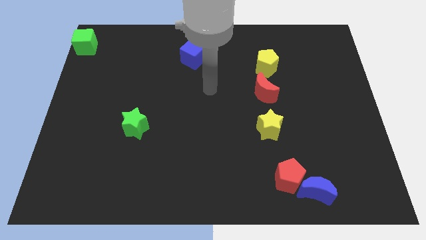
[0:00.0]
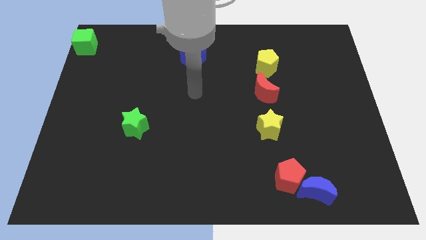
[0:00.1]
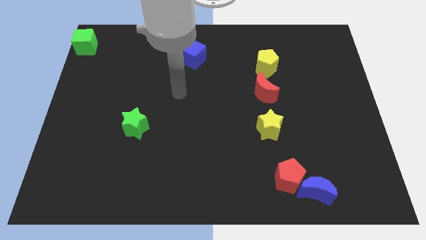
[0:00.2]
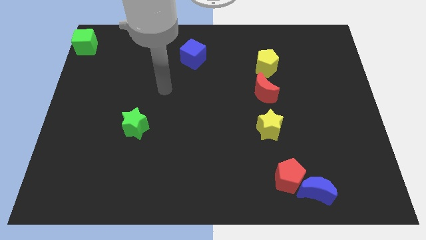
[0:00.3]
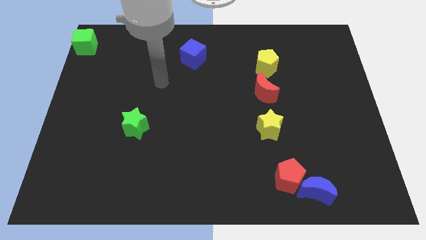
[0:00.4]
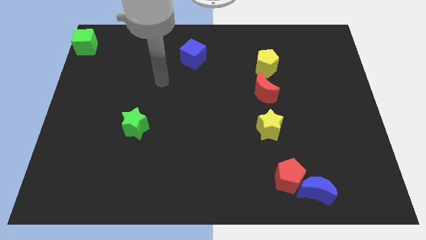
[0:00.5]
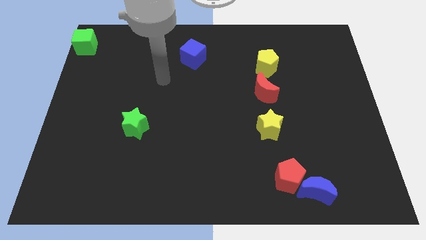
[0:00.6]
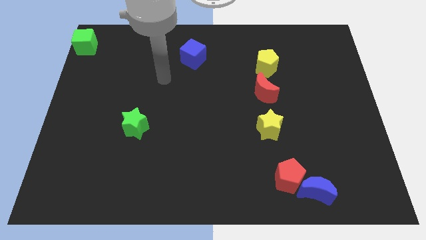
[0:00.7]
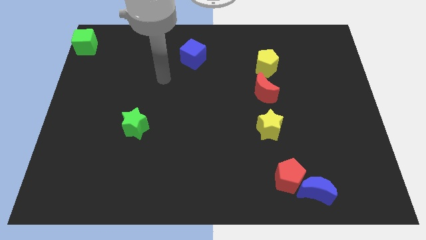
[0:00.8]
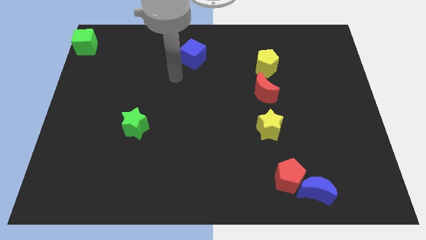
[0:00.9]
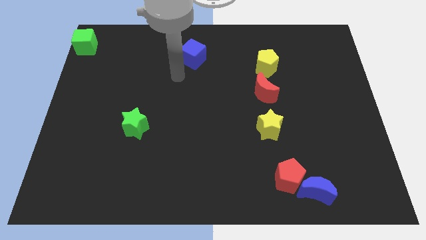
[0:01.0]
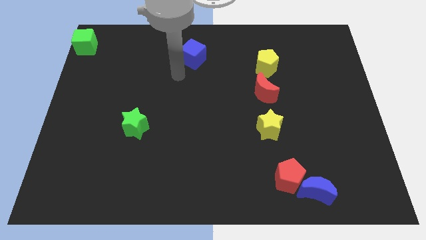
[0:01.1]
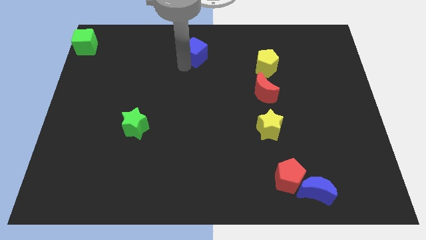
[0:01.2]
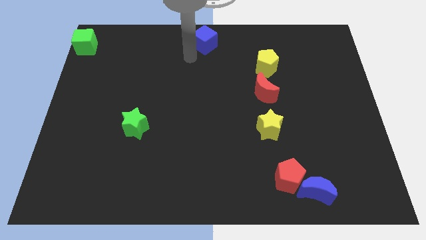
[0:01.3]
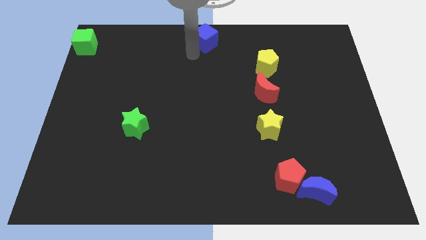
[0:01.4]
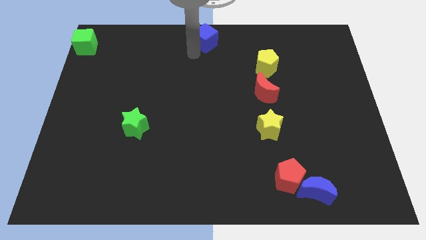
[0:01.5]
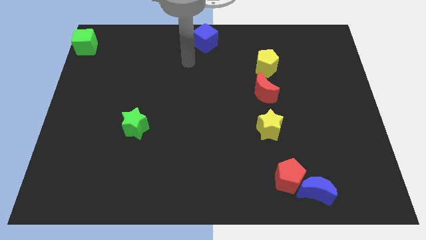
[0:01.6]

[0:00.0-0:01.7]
move blue block to the top center of the board

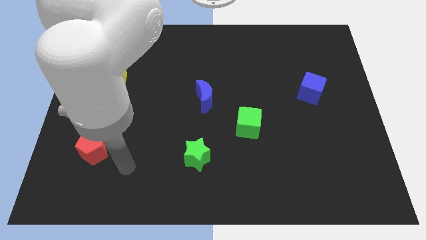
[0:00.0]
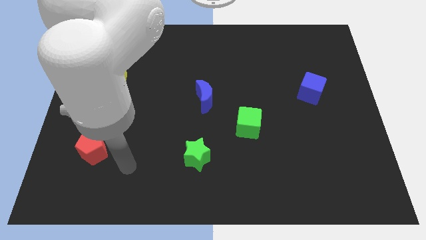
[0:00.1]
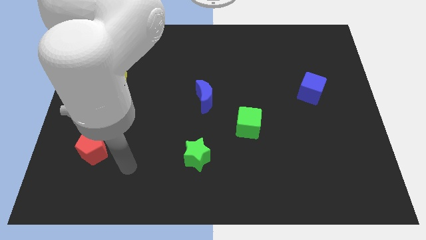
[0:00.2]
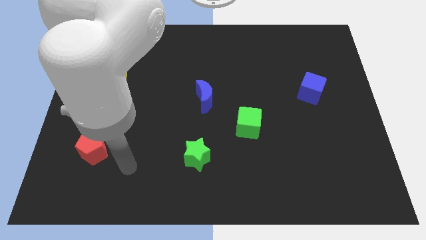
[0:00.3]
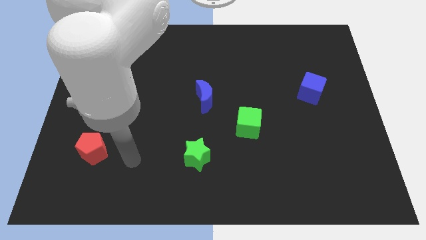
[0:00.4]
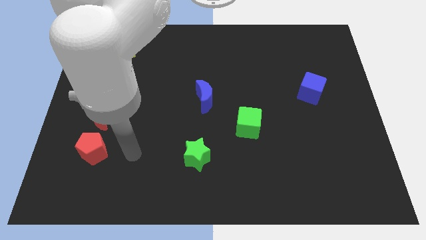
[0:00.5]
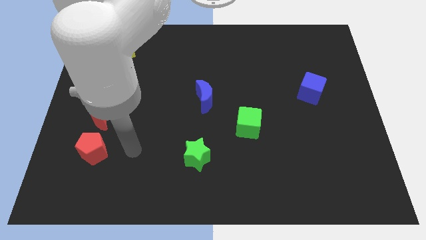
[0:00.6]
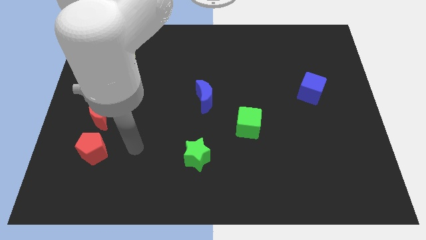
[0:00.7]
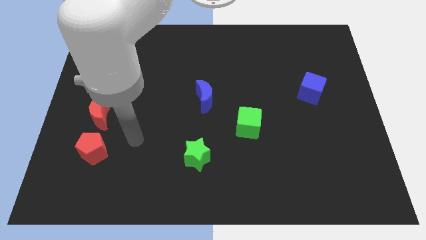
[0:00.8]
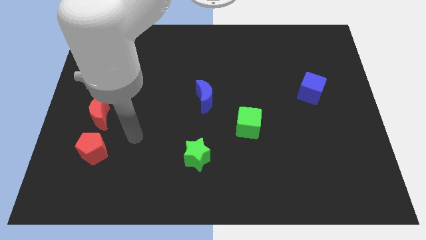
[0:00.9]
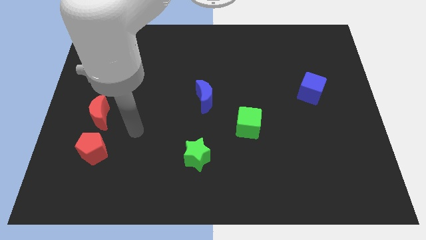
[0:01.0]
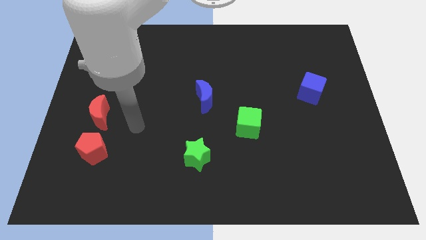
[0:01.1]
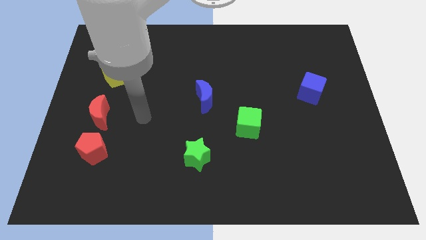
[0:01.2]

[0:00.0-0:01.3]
point your arm at the right of the red crescent

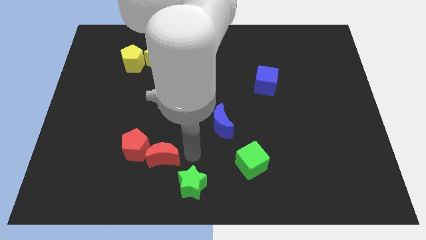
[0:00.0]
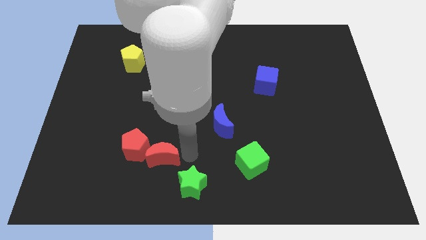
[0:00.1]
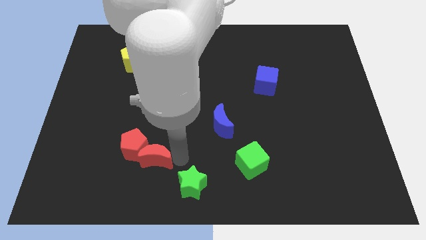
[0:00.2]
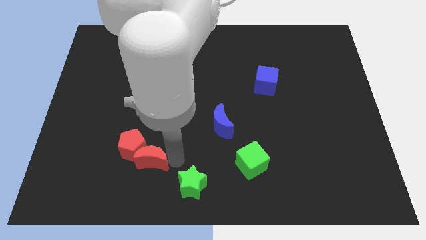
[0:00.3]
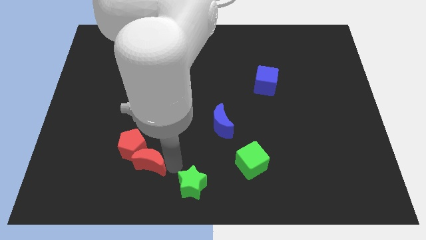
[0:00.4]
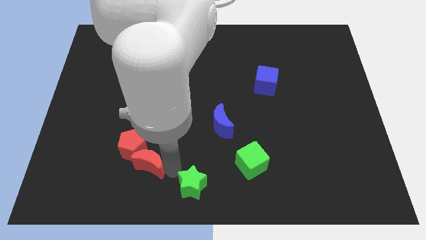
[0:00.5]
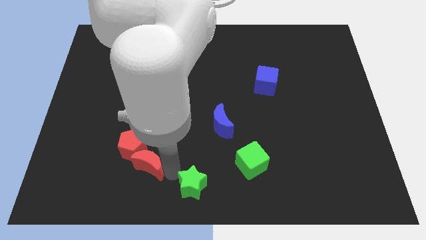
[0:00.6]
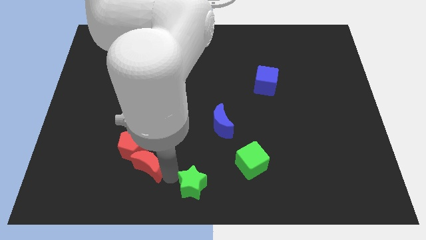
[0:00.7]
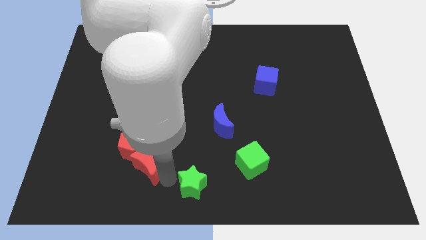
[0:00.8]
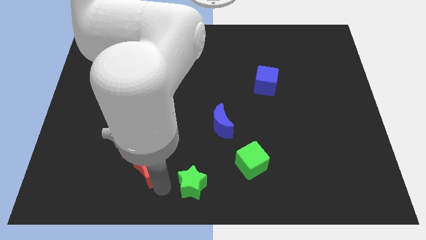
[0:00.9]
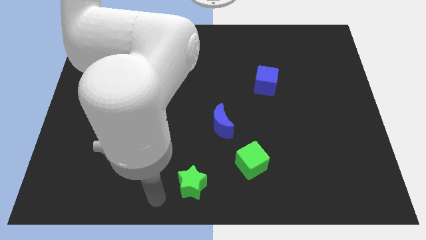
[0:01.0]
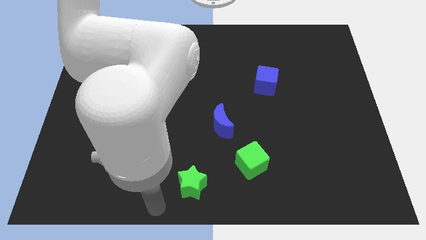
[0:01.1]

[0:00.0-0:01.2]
slightly push the red moon to the bottom center

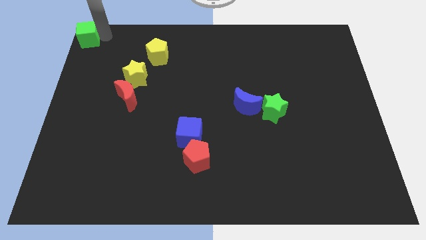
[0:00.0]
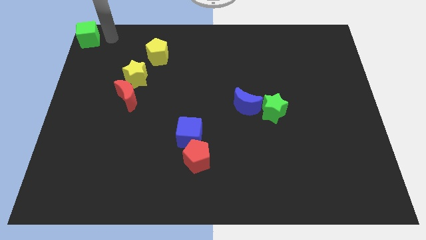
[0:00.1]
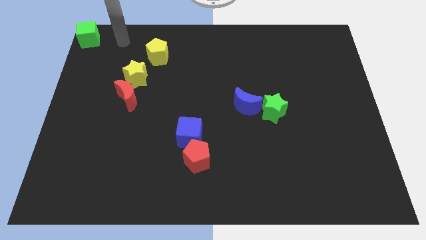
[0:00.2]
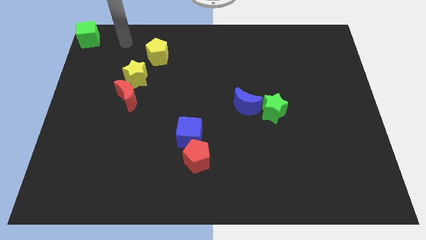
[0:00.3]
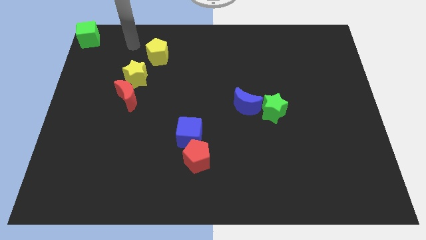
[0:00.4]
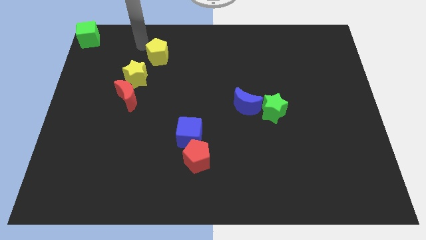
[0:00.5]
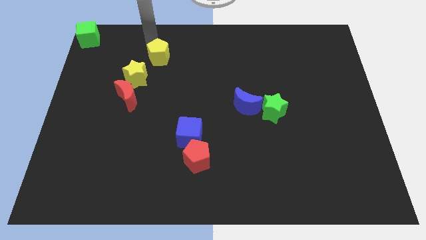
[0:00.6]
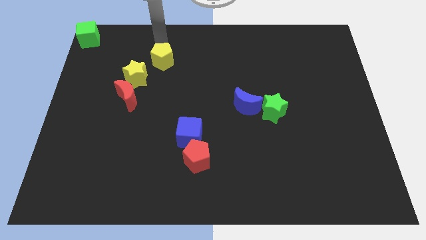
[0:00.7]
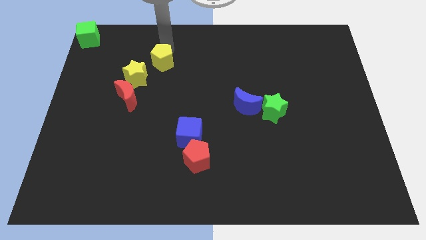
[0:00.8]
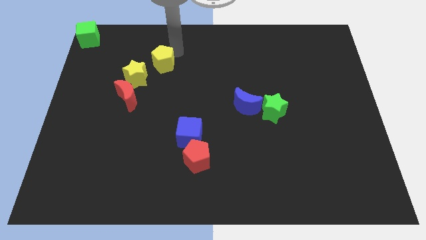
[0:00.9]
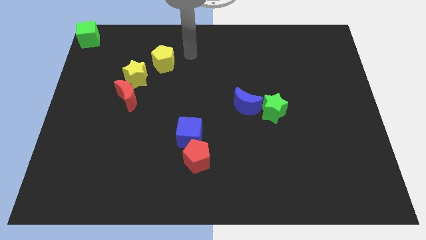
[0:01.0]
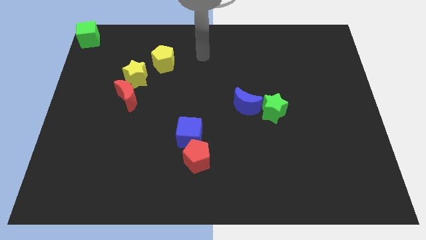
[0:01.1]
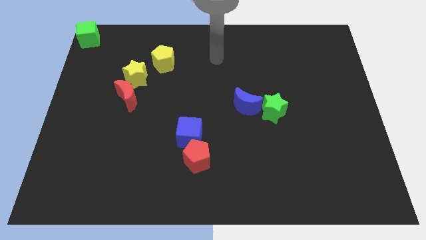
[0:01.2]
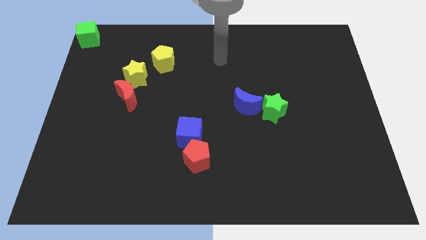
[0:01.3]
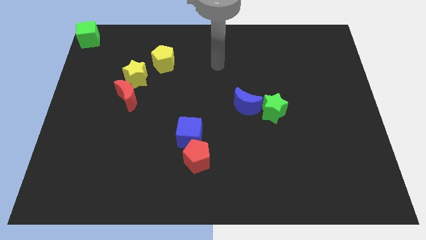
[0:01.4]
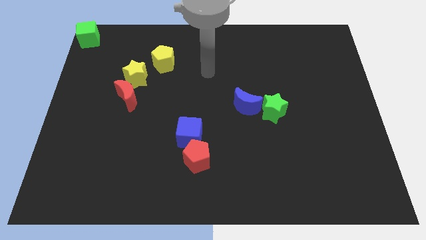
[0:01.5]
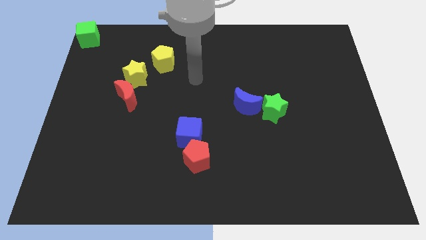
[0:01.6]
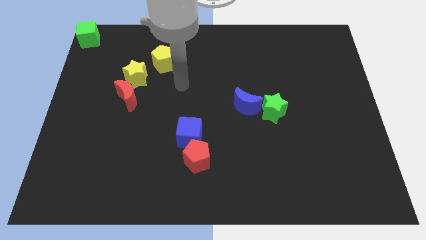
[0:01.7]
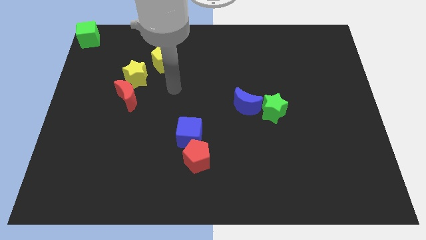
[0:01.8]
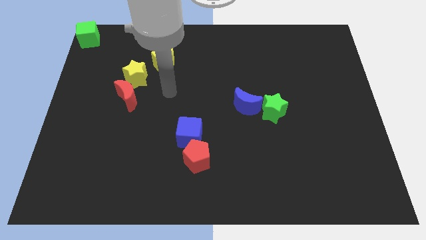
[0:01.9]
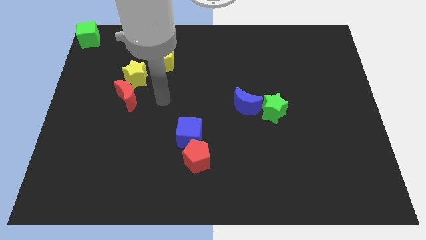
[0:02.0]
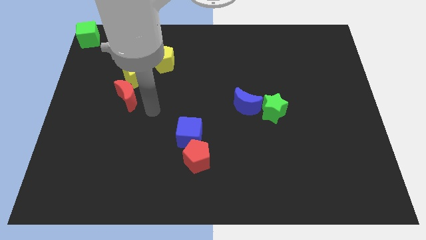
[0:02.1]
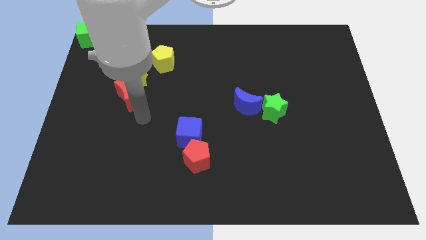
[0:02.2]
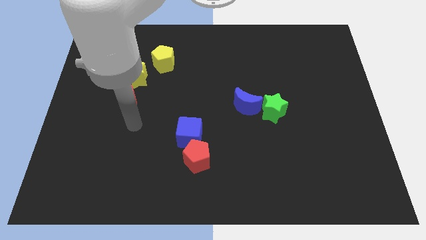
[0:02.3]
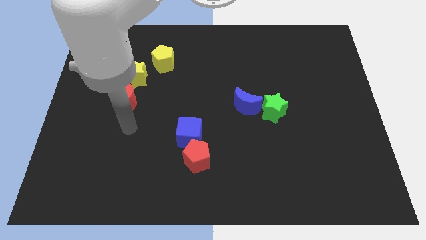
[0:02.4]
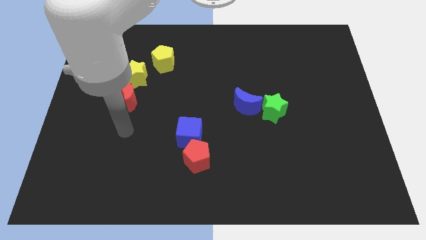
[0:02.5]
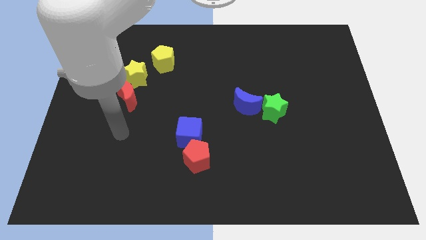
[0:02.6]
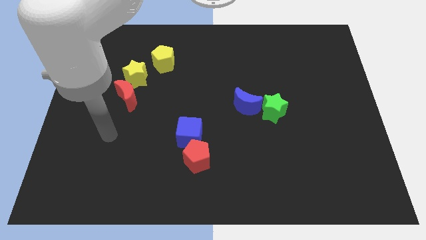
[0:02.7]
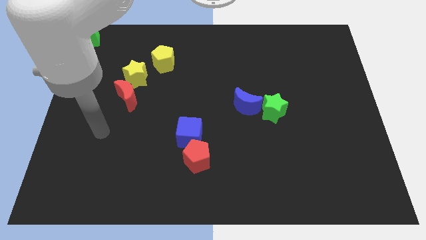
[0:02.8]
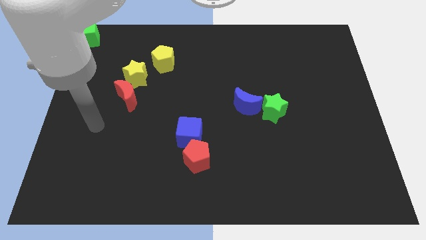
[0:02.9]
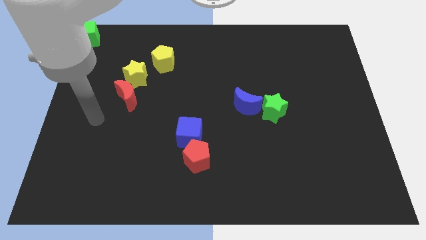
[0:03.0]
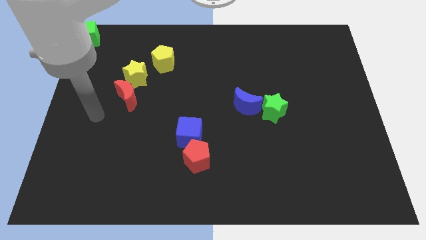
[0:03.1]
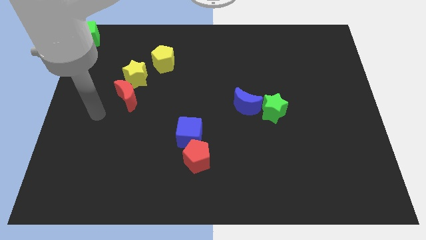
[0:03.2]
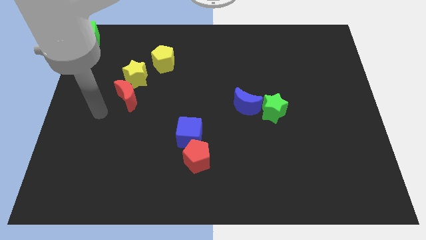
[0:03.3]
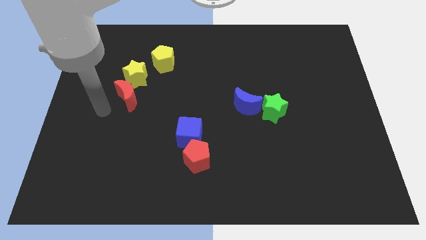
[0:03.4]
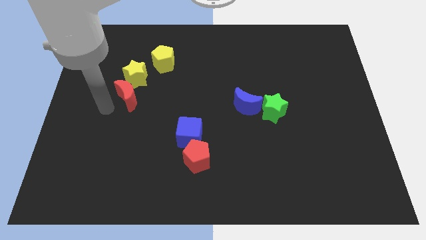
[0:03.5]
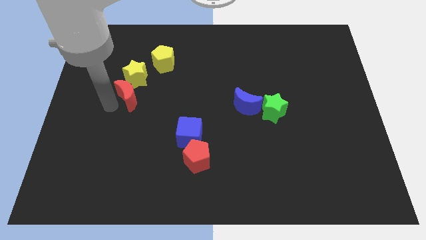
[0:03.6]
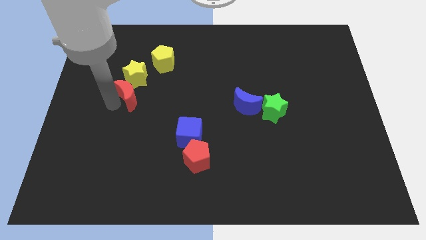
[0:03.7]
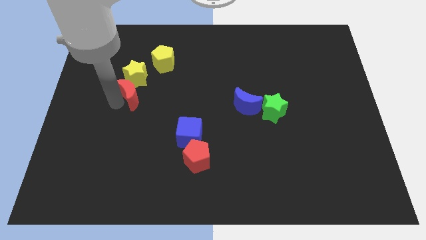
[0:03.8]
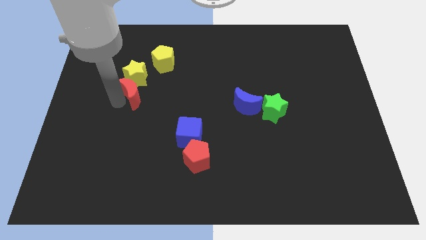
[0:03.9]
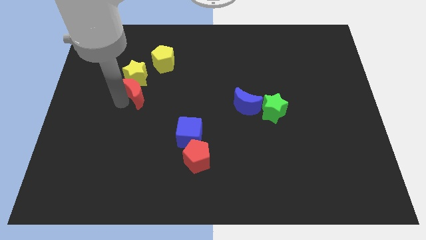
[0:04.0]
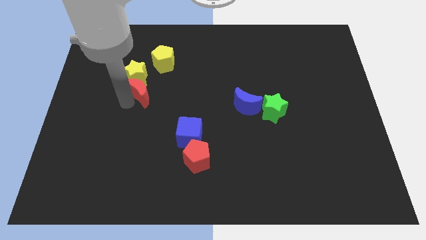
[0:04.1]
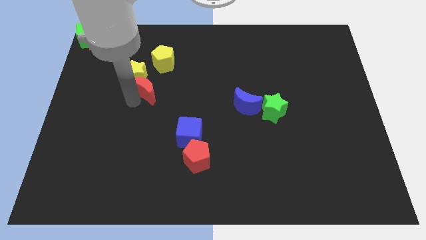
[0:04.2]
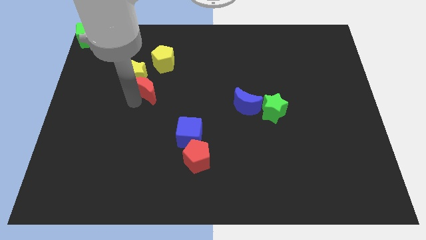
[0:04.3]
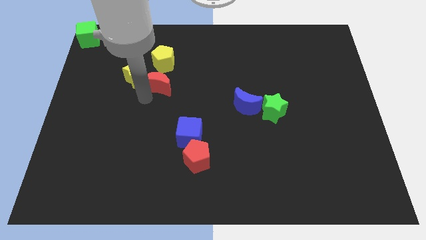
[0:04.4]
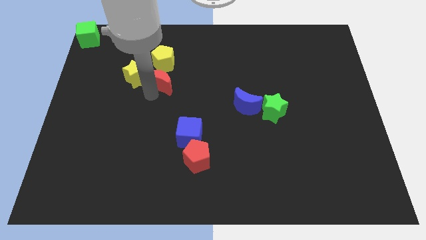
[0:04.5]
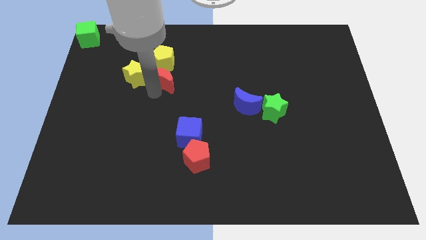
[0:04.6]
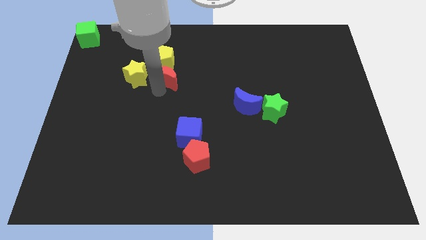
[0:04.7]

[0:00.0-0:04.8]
move the red moon below the yellow pentagon

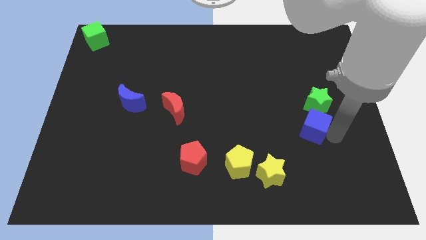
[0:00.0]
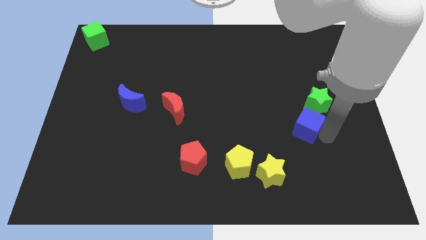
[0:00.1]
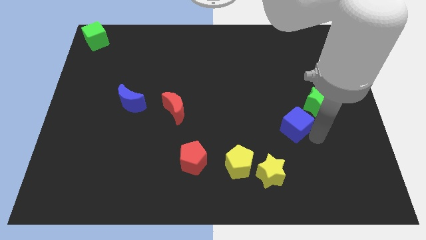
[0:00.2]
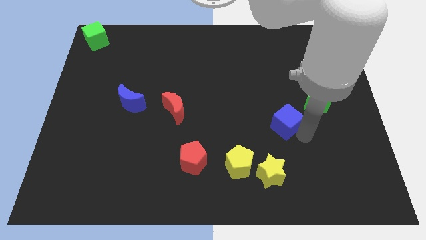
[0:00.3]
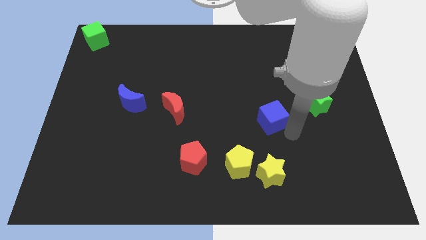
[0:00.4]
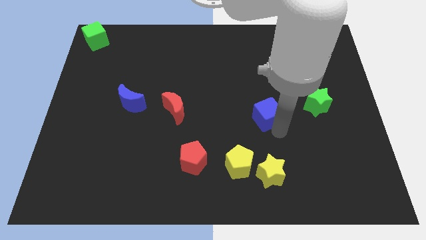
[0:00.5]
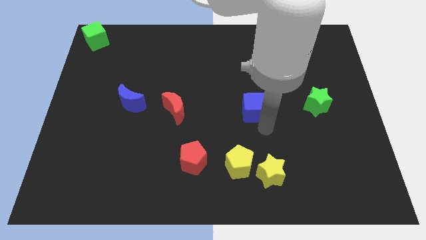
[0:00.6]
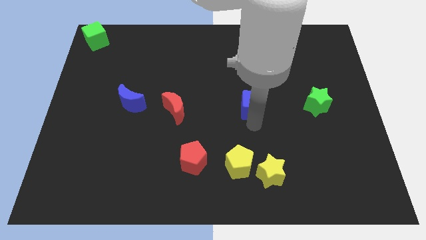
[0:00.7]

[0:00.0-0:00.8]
place the blue cube to the left of the green star
